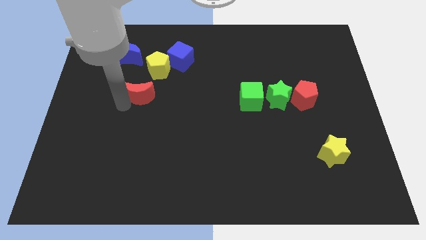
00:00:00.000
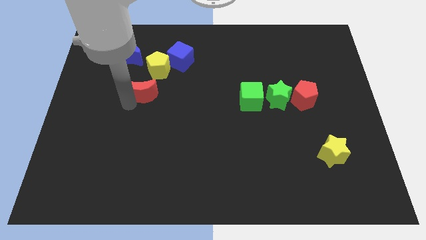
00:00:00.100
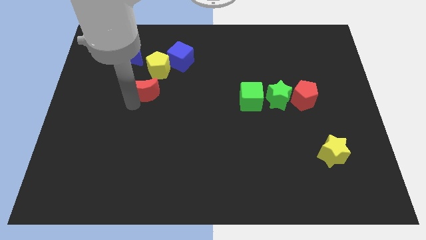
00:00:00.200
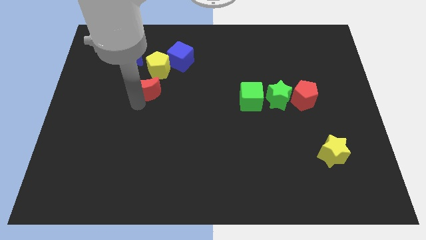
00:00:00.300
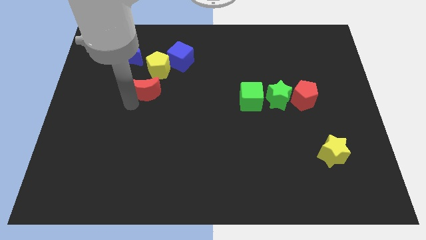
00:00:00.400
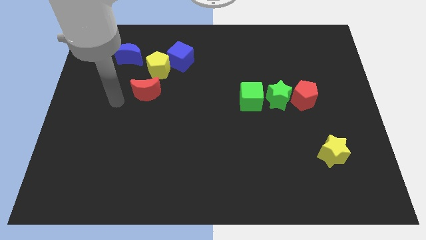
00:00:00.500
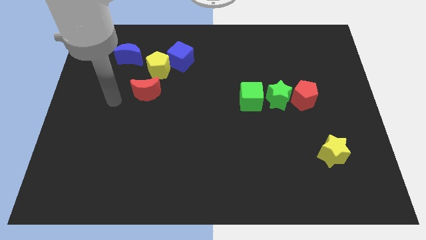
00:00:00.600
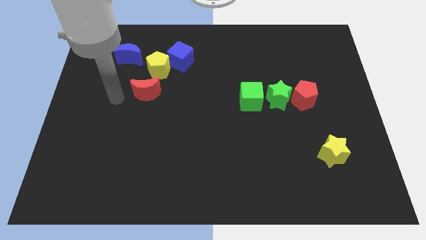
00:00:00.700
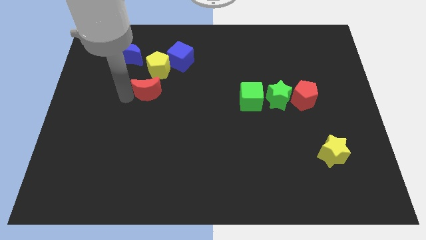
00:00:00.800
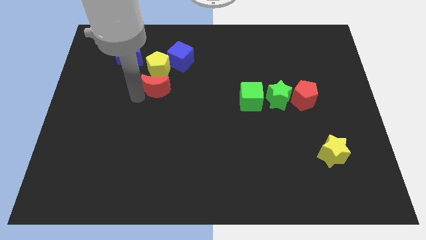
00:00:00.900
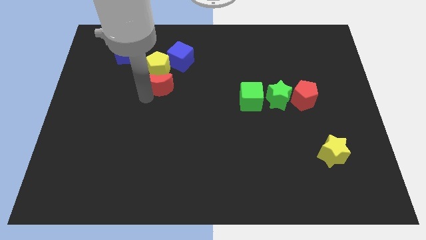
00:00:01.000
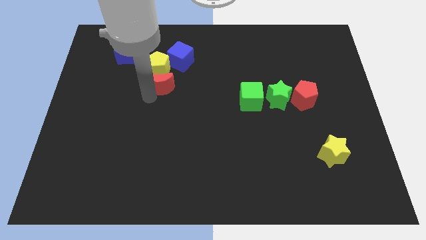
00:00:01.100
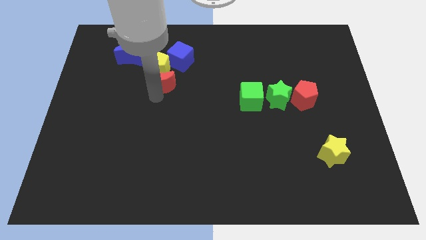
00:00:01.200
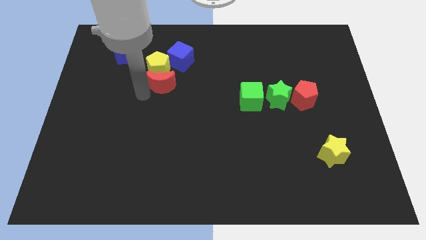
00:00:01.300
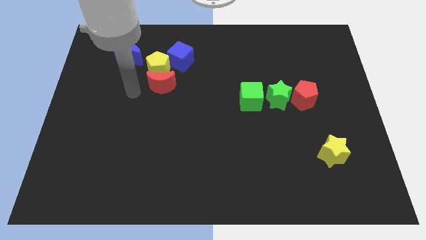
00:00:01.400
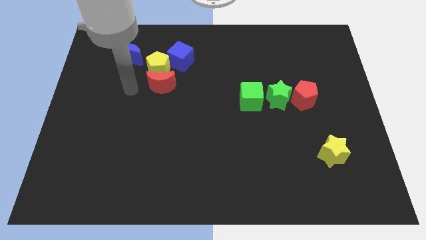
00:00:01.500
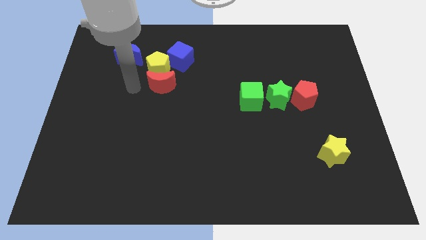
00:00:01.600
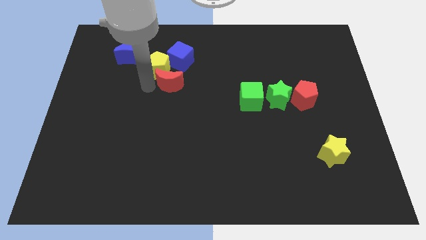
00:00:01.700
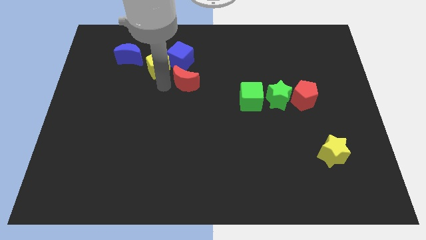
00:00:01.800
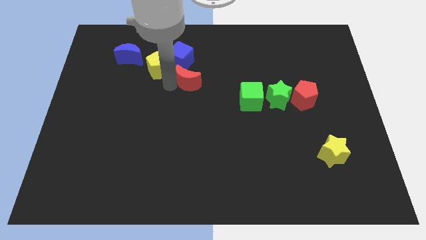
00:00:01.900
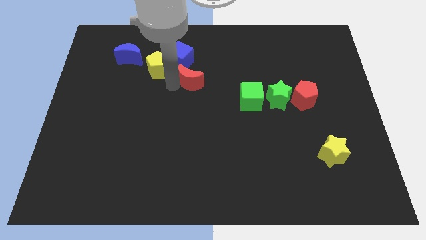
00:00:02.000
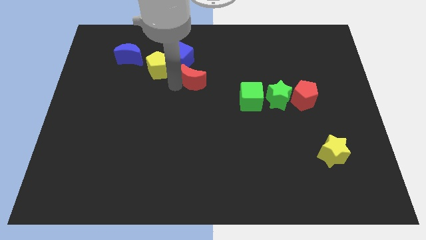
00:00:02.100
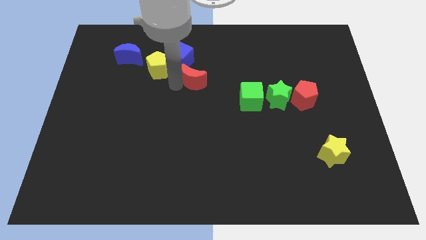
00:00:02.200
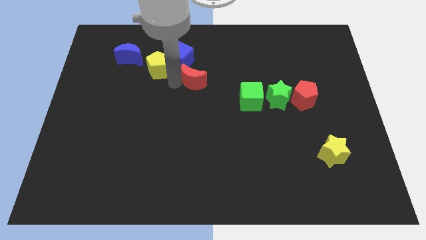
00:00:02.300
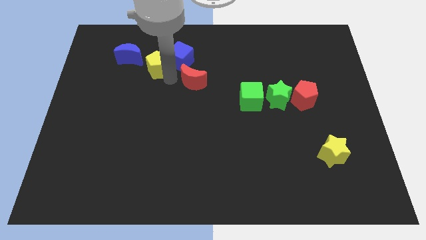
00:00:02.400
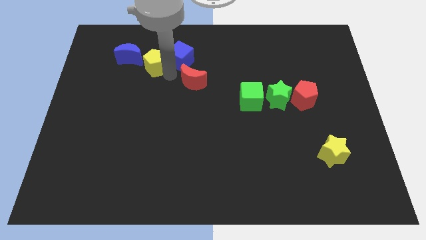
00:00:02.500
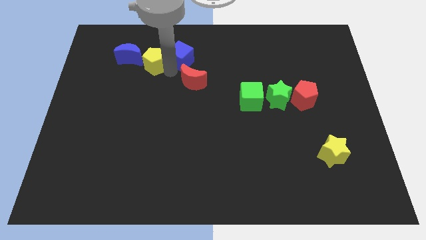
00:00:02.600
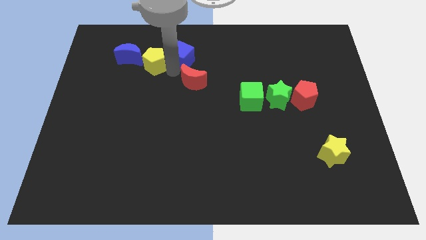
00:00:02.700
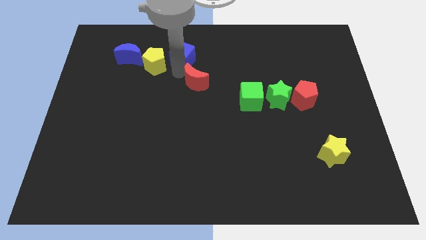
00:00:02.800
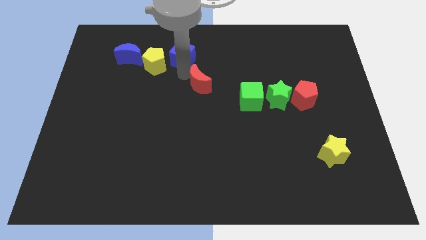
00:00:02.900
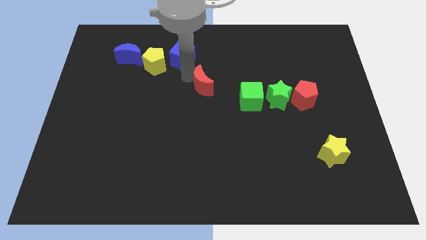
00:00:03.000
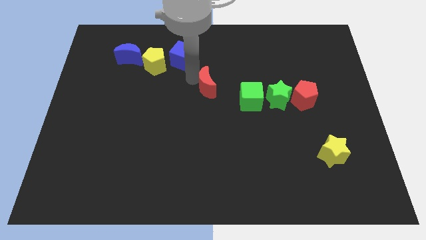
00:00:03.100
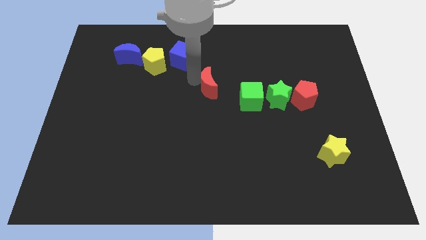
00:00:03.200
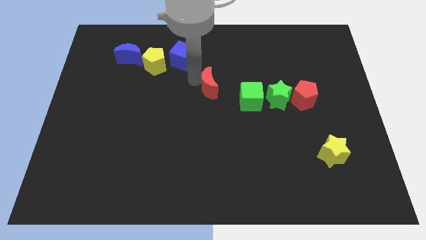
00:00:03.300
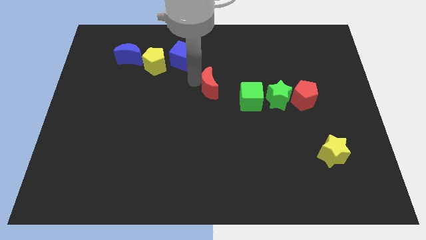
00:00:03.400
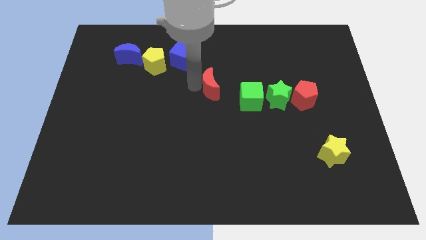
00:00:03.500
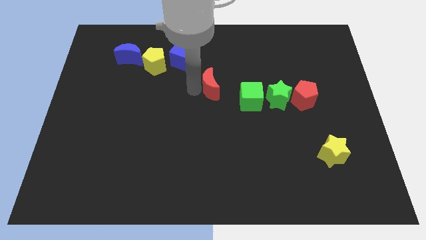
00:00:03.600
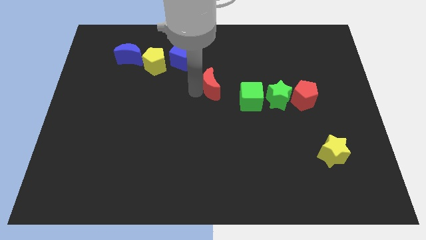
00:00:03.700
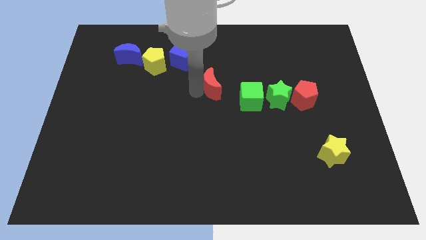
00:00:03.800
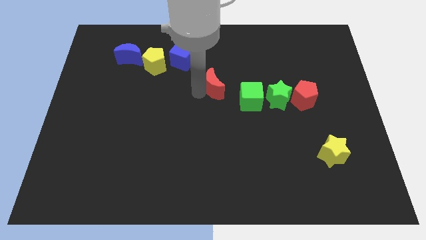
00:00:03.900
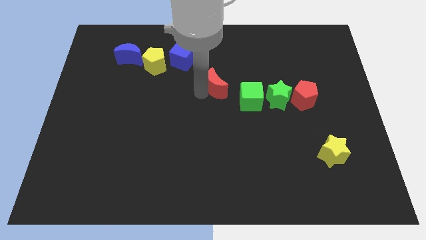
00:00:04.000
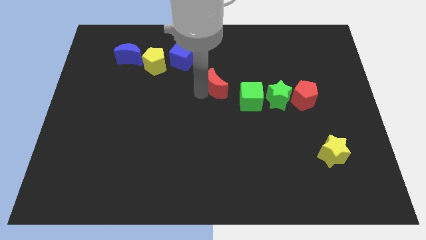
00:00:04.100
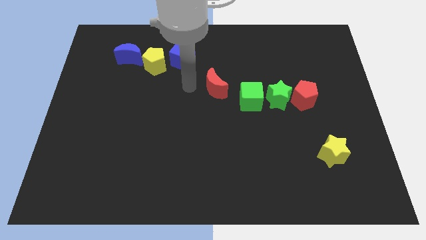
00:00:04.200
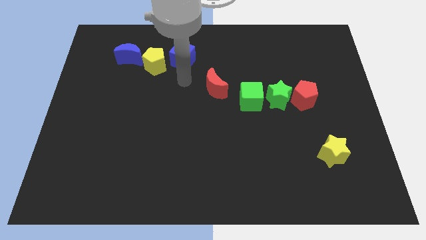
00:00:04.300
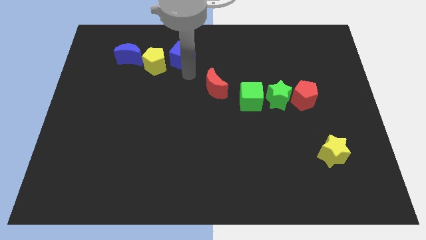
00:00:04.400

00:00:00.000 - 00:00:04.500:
move red moon towards the green cube

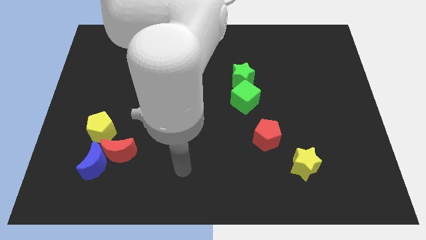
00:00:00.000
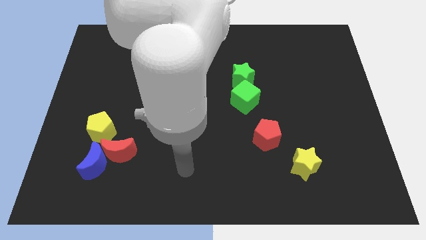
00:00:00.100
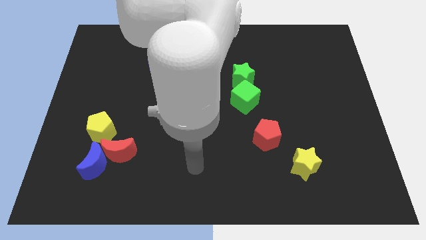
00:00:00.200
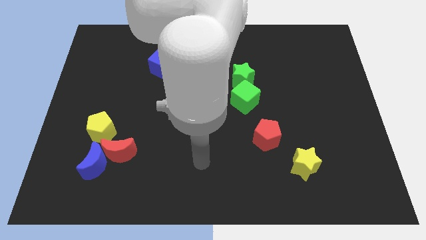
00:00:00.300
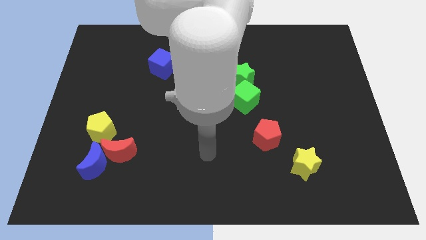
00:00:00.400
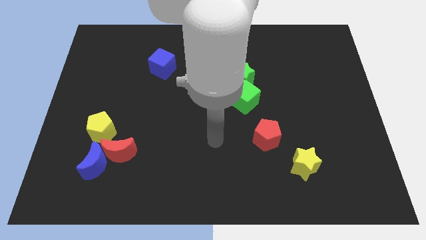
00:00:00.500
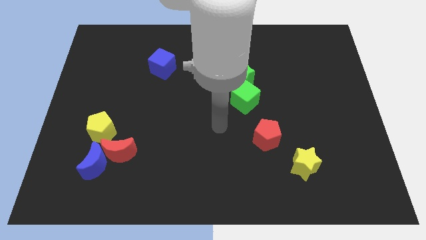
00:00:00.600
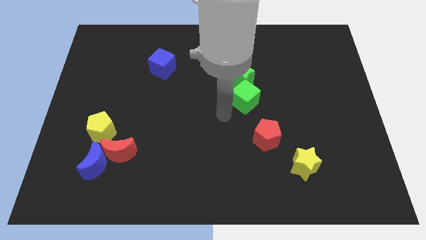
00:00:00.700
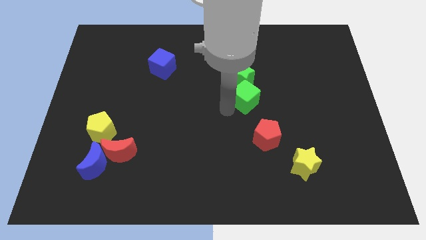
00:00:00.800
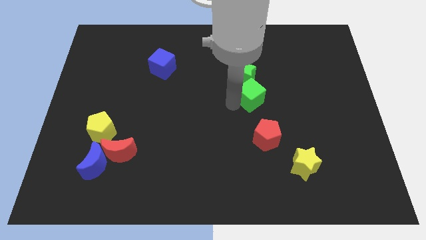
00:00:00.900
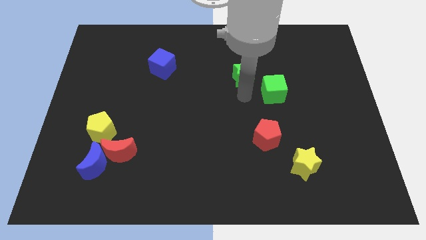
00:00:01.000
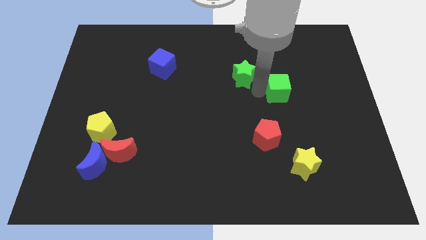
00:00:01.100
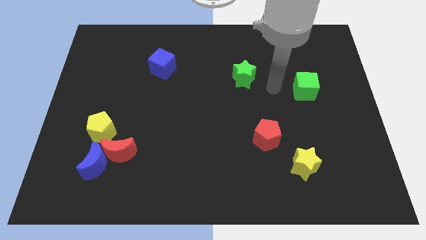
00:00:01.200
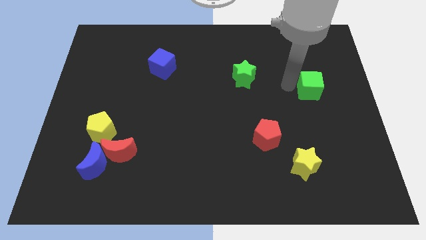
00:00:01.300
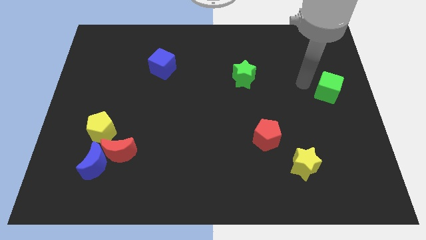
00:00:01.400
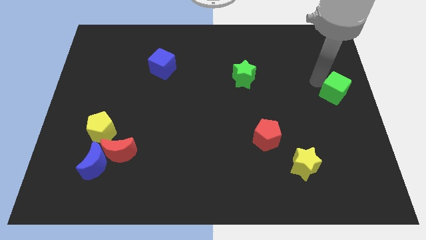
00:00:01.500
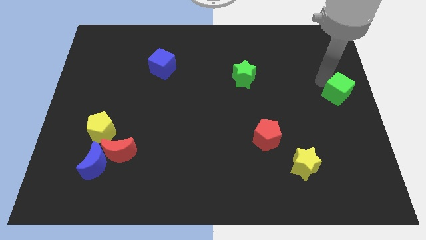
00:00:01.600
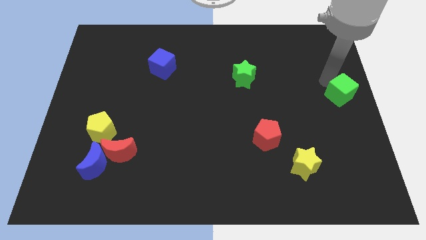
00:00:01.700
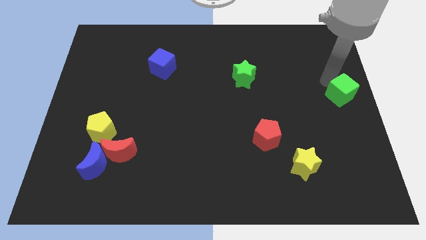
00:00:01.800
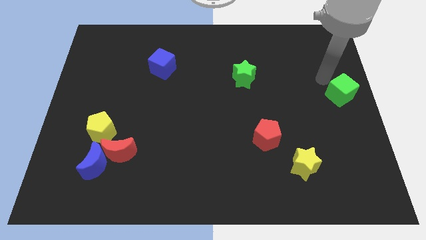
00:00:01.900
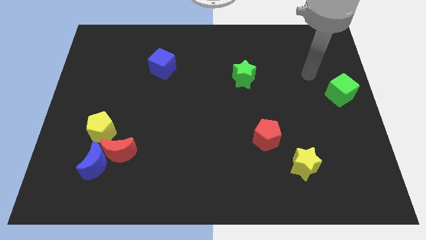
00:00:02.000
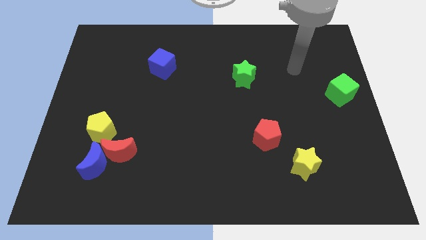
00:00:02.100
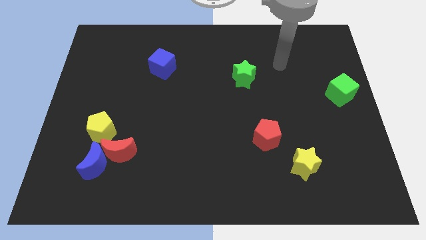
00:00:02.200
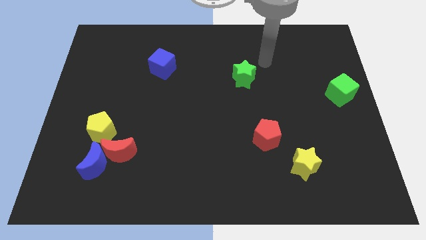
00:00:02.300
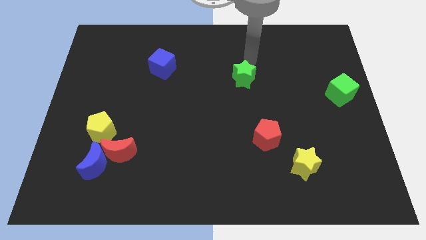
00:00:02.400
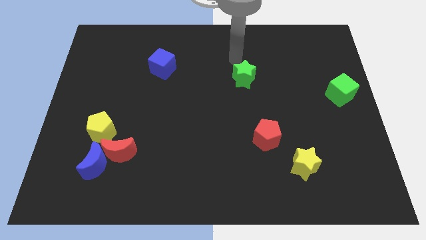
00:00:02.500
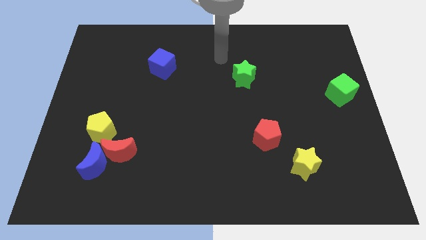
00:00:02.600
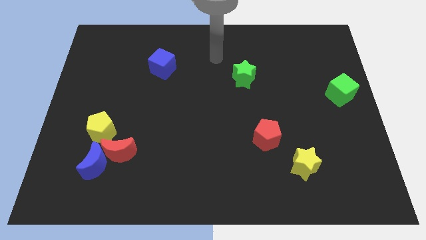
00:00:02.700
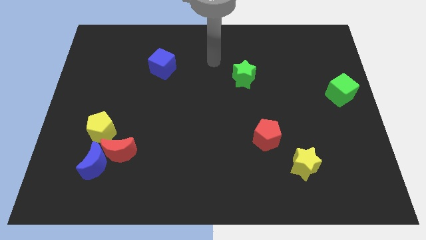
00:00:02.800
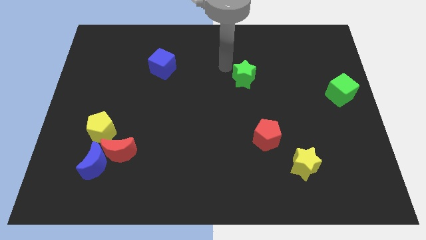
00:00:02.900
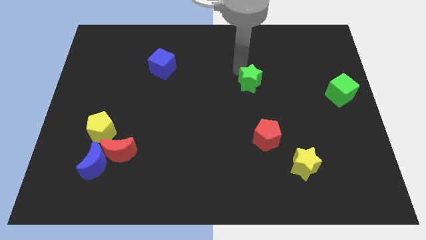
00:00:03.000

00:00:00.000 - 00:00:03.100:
separate the green cube from the green star

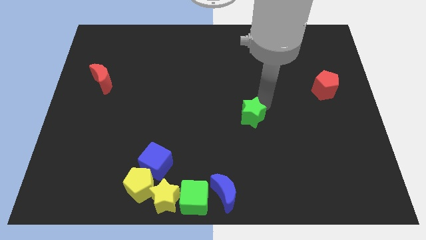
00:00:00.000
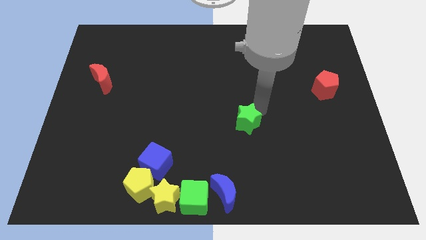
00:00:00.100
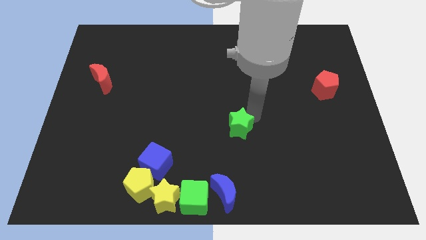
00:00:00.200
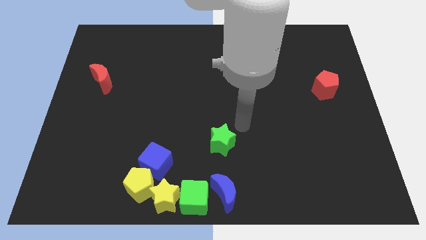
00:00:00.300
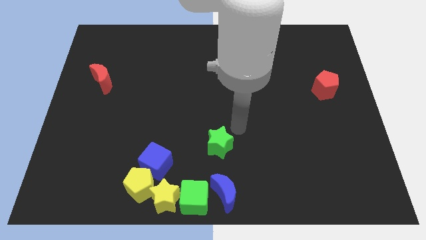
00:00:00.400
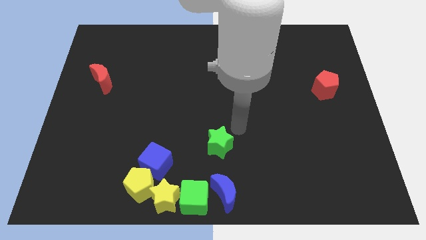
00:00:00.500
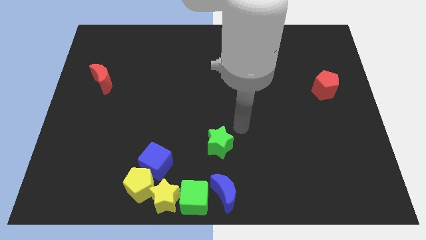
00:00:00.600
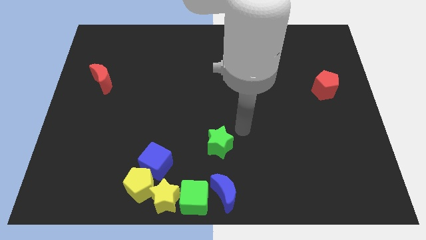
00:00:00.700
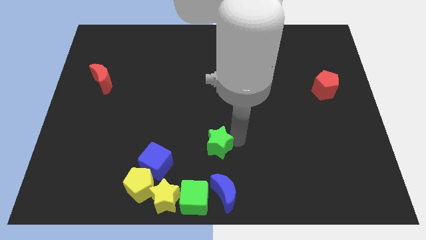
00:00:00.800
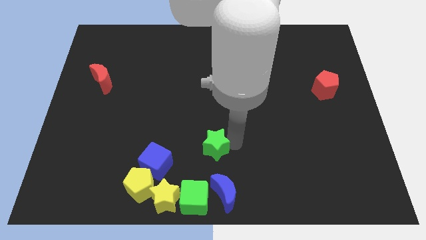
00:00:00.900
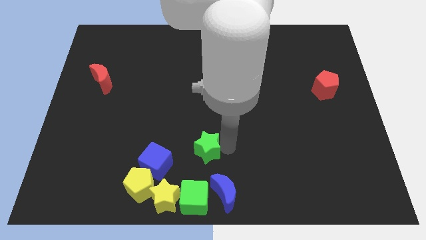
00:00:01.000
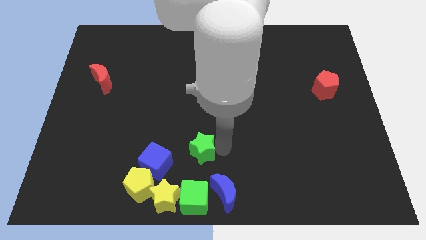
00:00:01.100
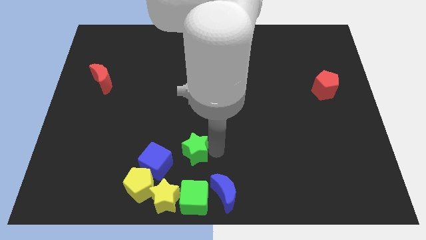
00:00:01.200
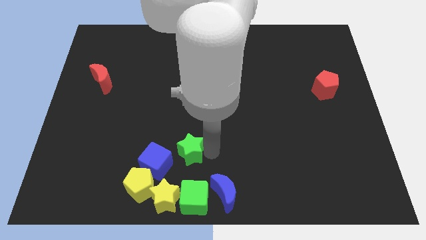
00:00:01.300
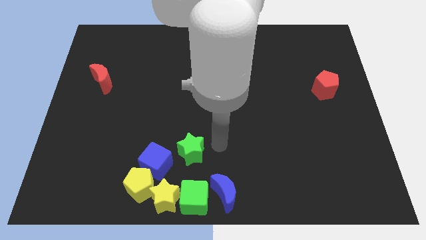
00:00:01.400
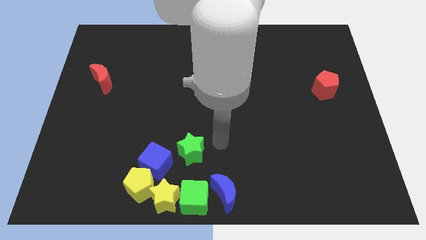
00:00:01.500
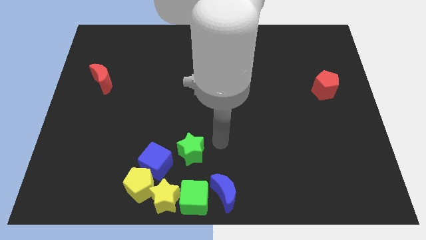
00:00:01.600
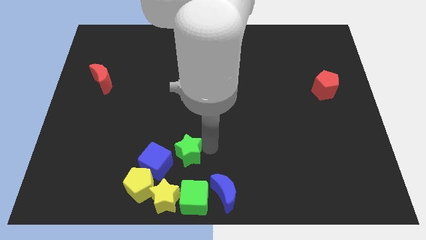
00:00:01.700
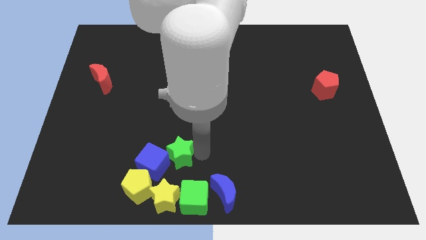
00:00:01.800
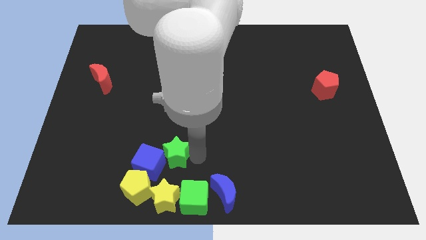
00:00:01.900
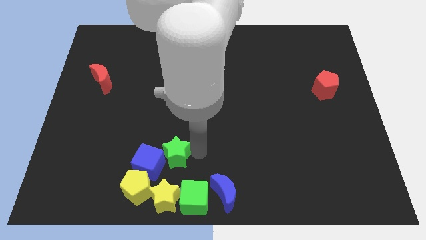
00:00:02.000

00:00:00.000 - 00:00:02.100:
put the green star to the top right side of the blue cube
